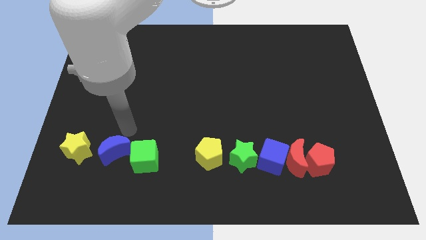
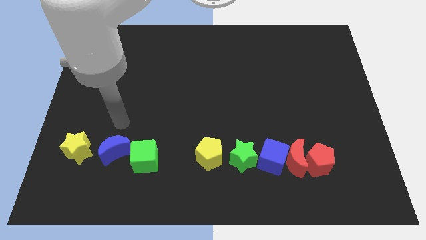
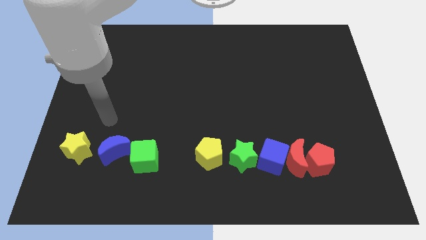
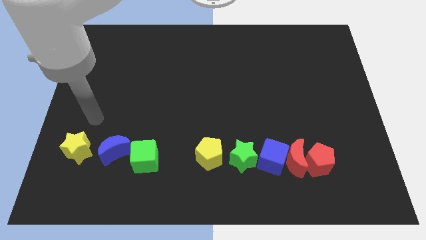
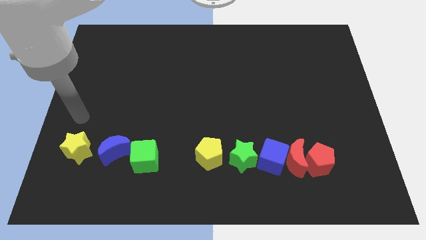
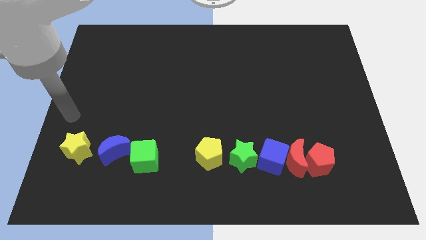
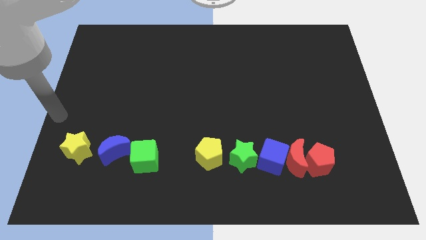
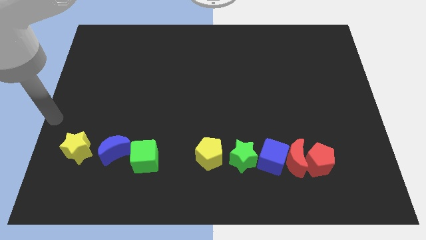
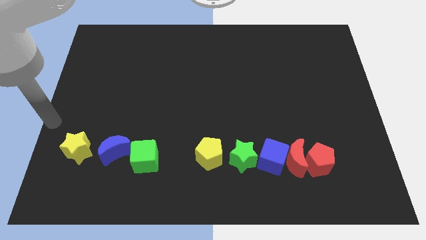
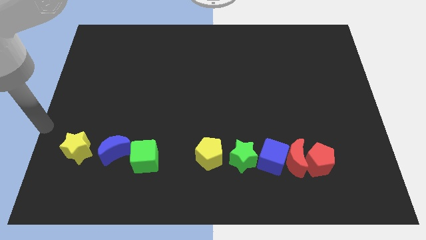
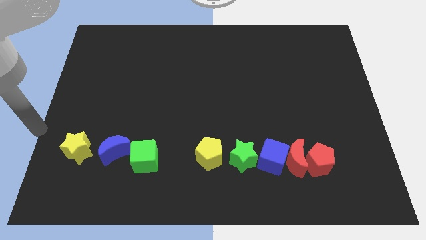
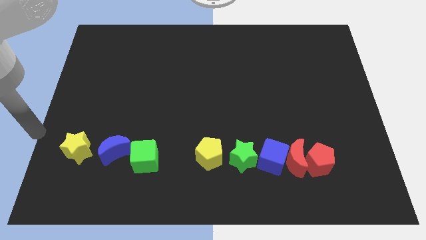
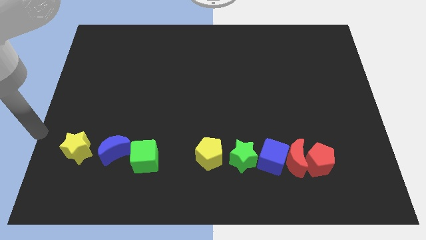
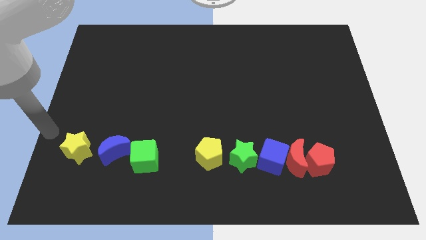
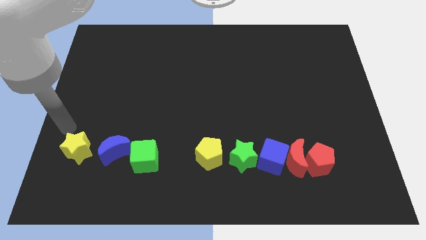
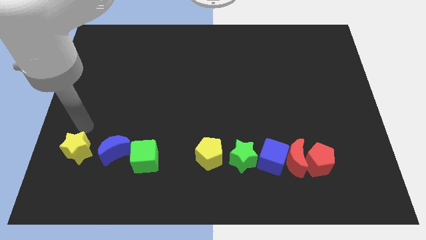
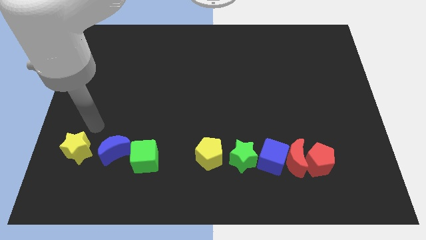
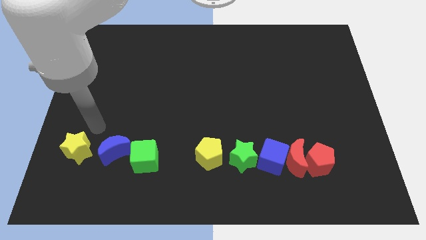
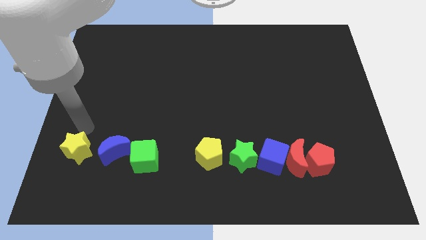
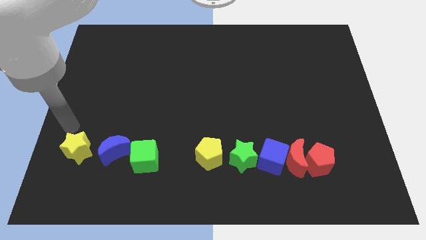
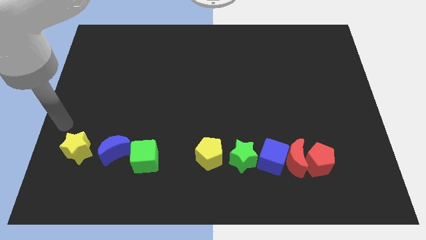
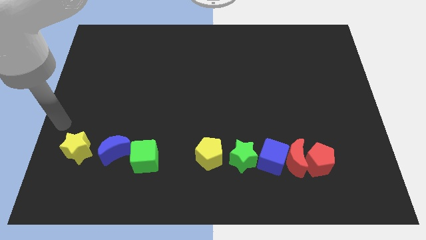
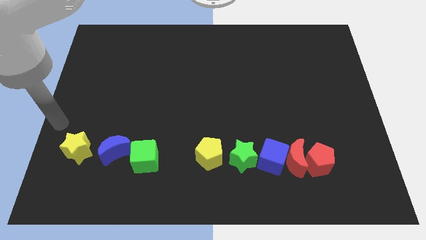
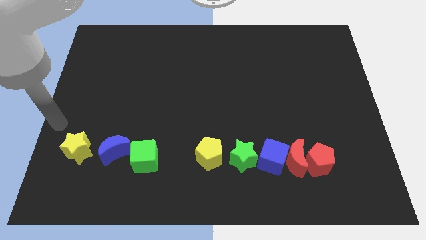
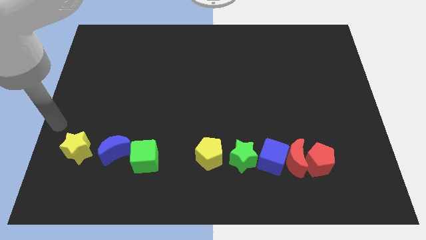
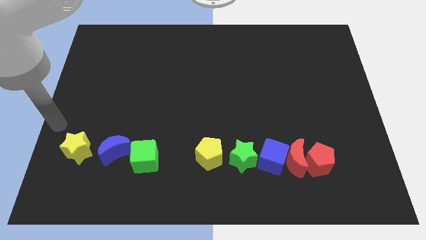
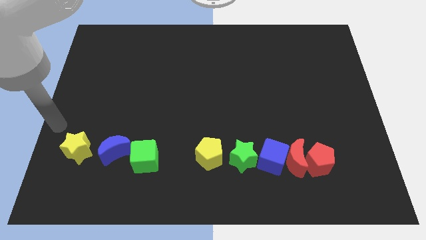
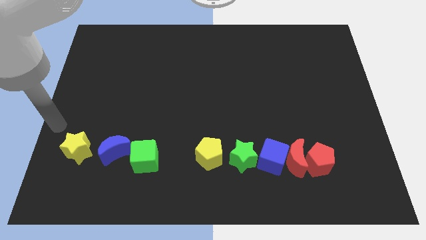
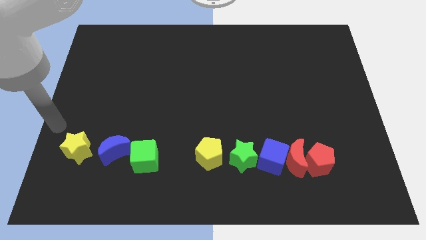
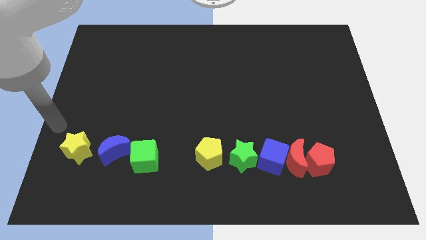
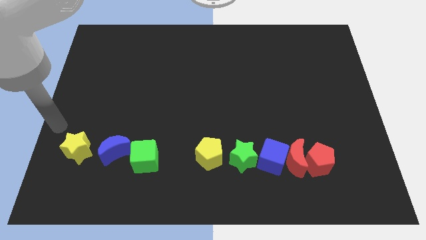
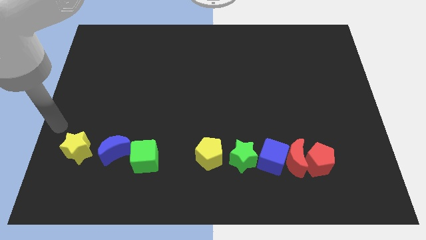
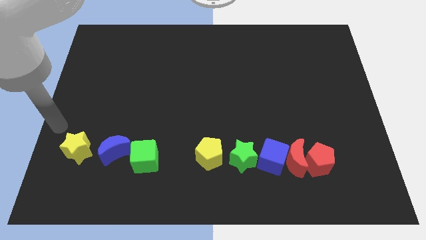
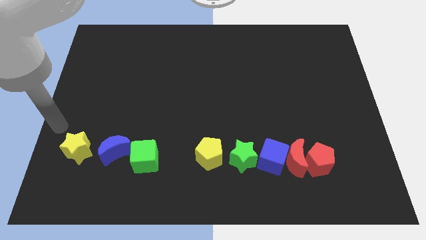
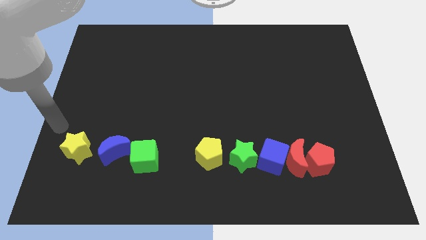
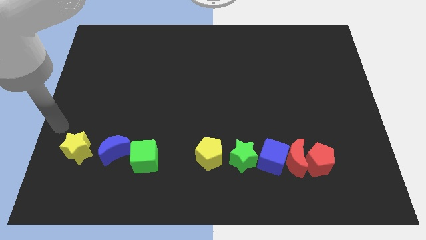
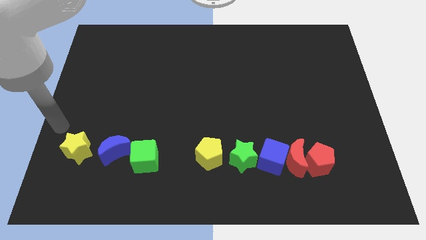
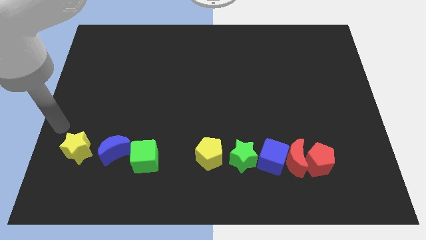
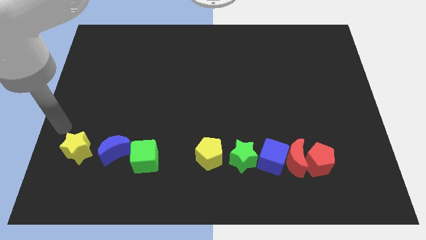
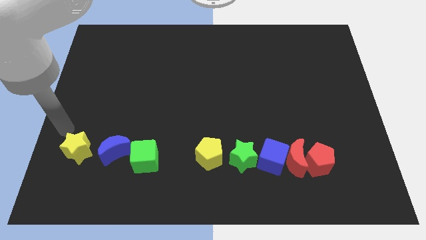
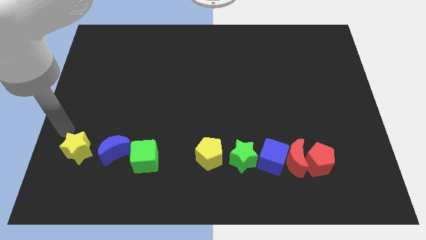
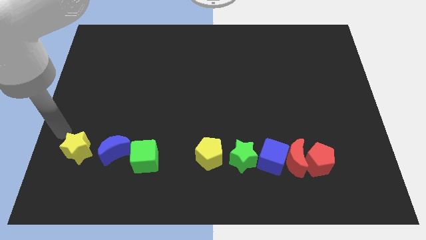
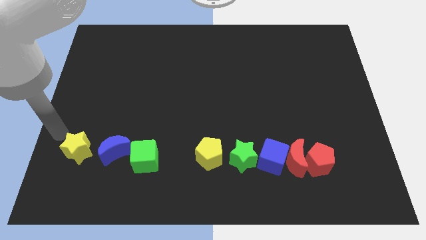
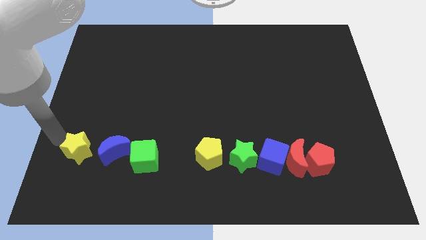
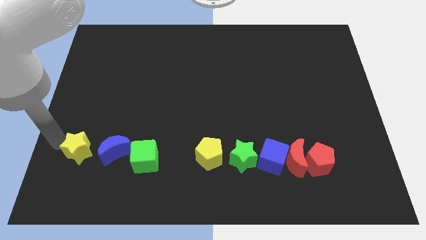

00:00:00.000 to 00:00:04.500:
move your arm from the top of the blue crescent to the left of the yellow star

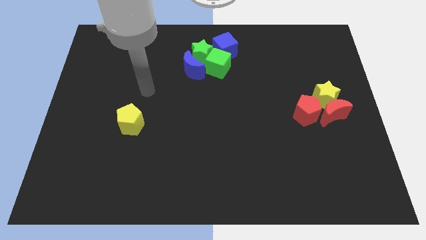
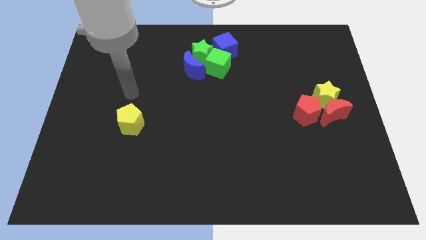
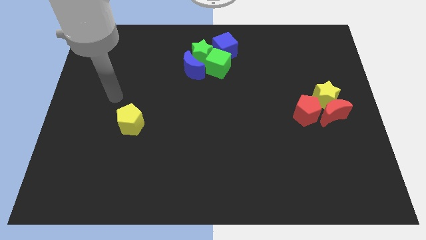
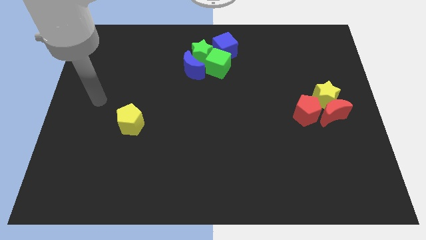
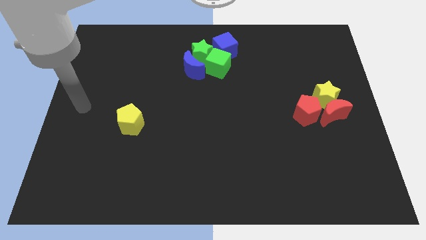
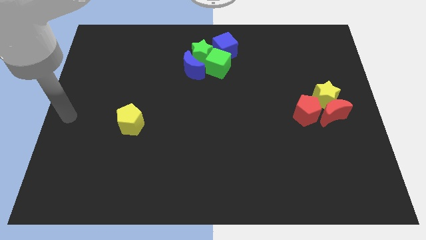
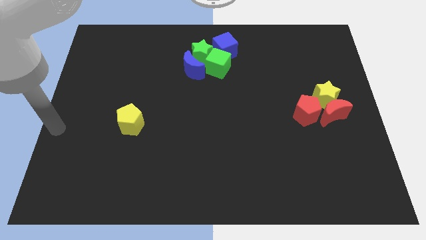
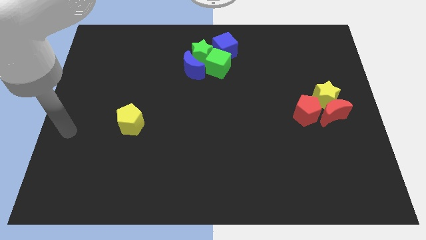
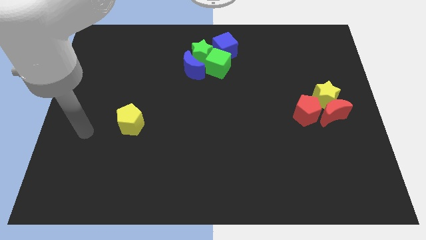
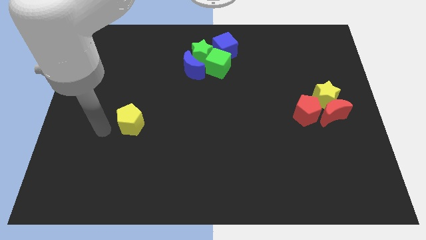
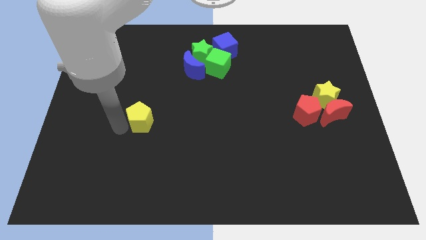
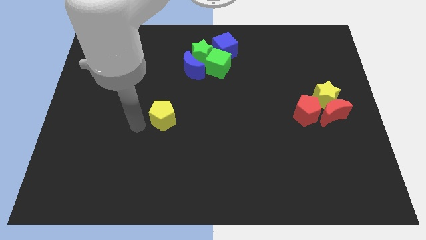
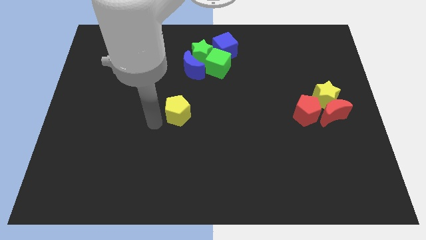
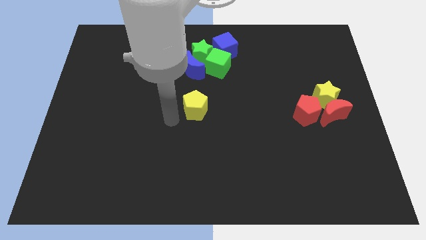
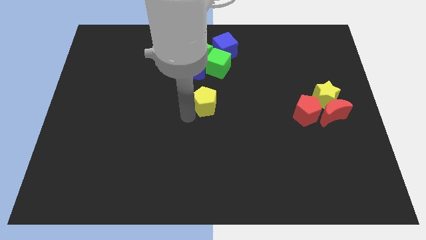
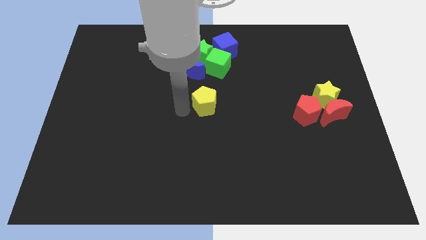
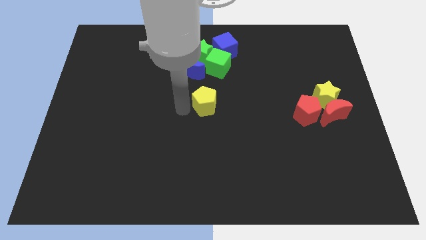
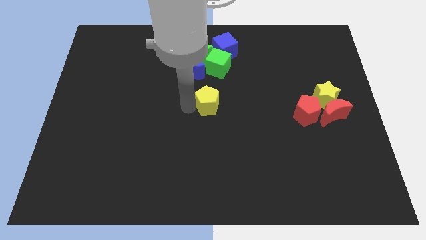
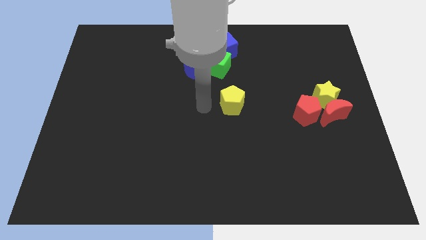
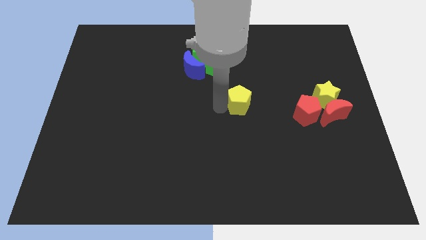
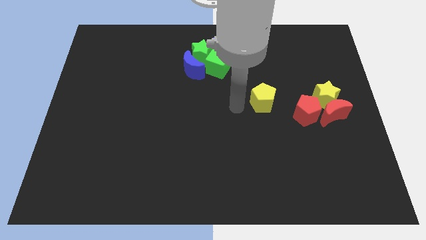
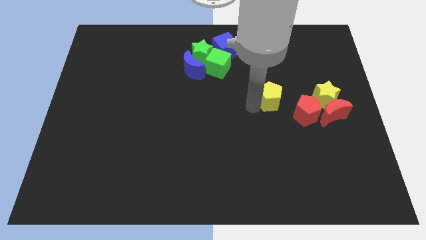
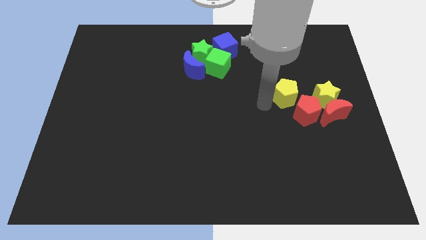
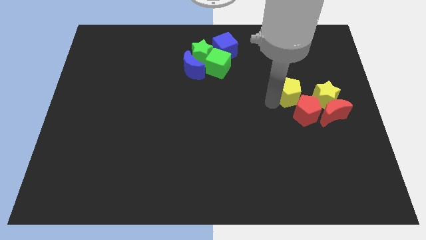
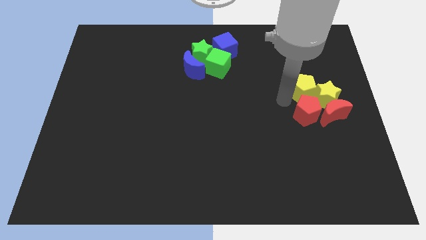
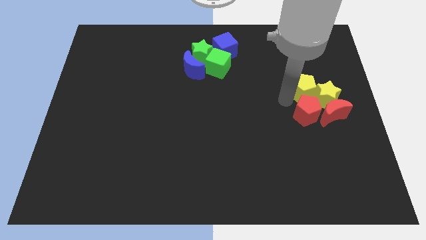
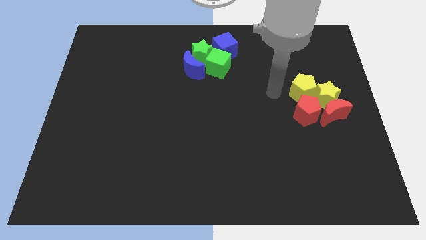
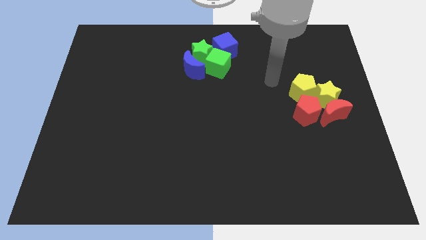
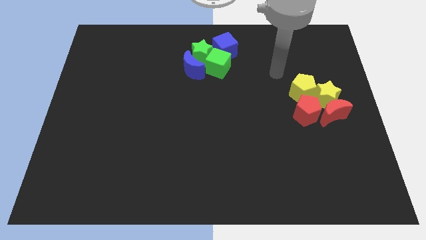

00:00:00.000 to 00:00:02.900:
push yellow pentagon into yellow star

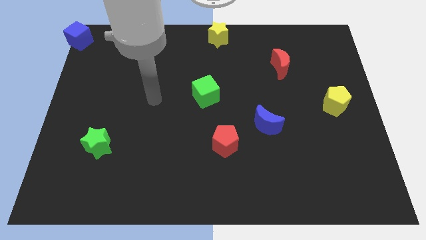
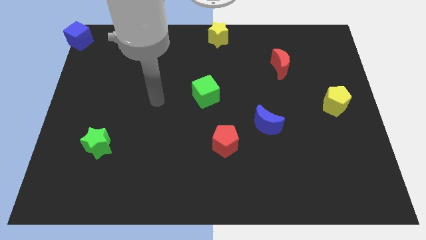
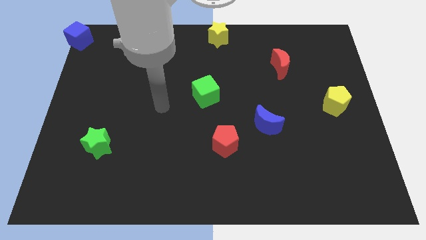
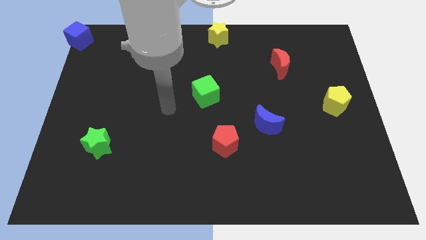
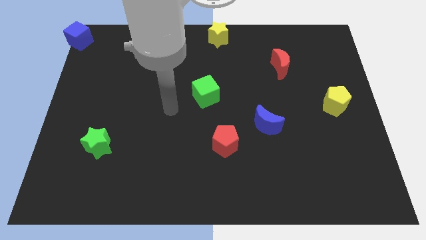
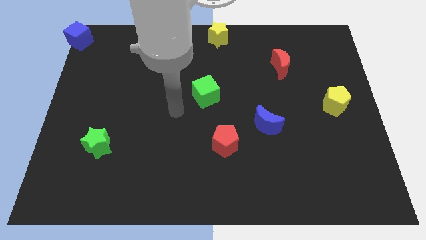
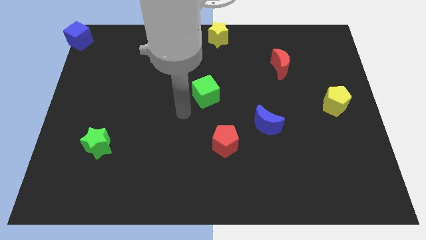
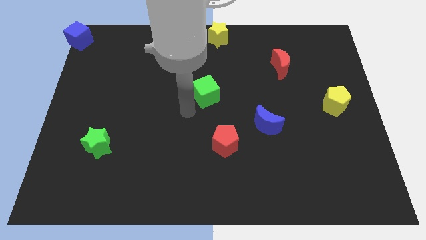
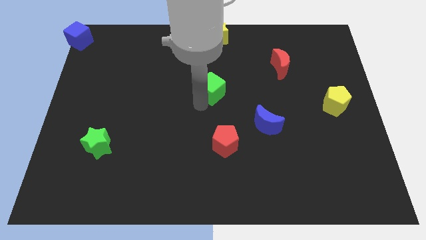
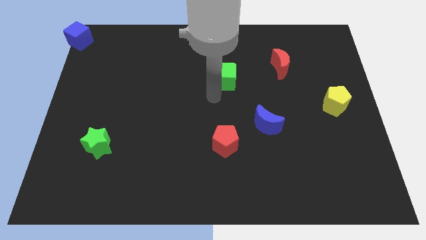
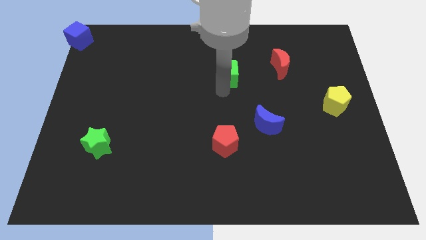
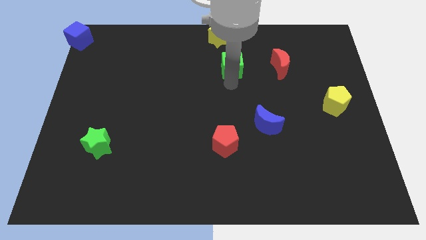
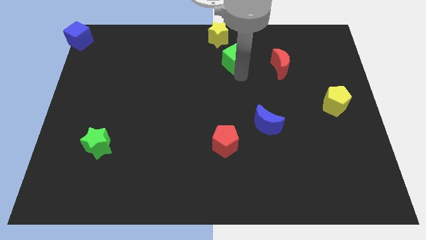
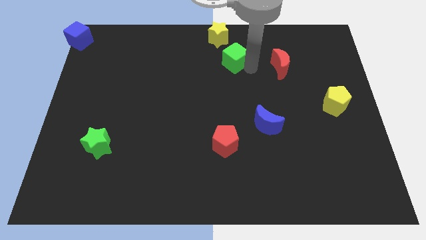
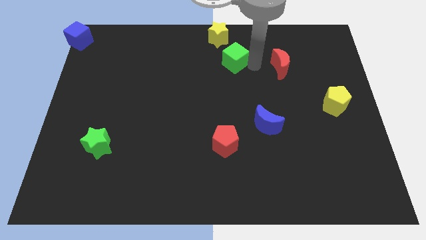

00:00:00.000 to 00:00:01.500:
push the green cube to the left of the red crescent
